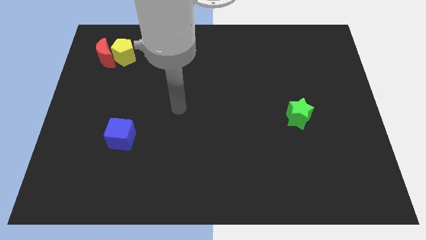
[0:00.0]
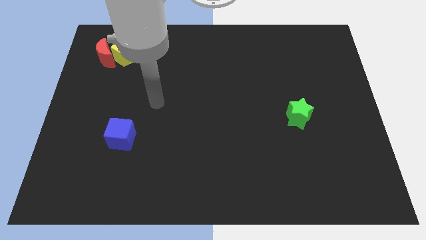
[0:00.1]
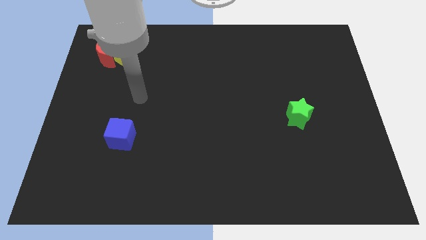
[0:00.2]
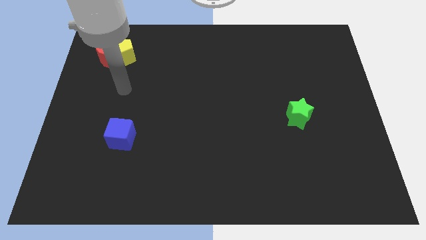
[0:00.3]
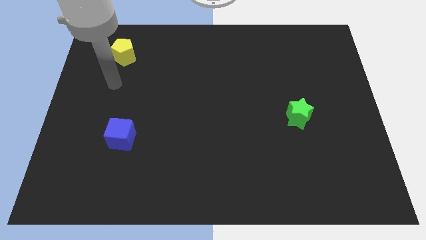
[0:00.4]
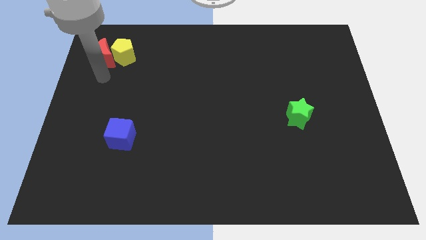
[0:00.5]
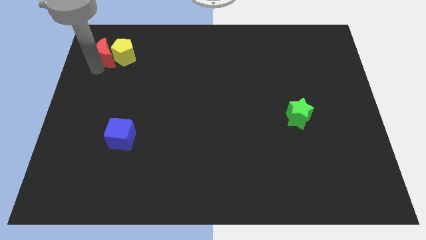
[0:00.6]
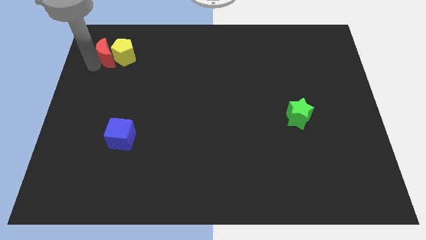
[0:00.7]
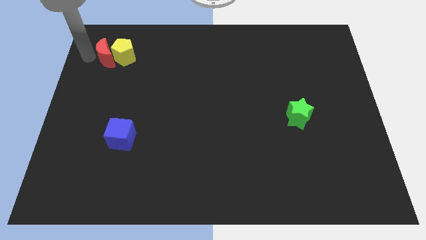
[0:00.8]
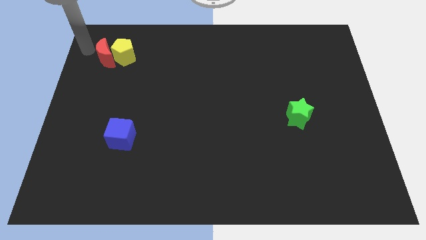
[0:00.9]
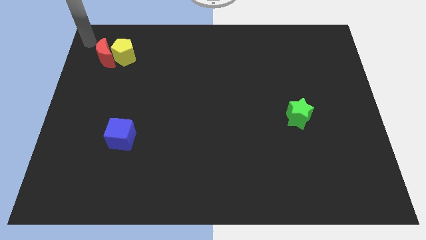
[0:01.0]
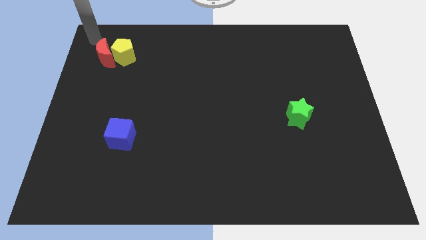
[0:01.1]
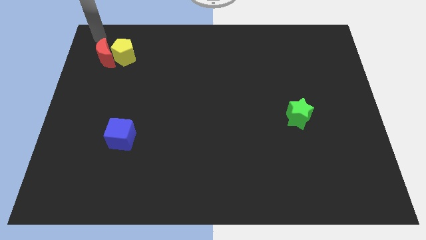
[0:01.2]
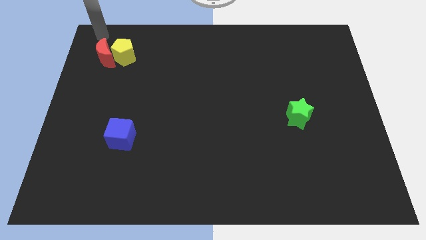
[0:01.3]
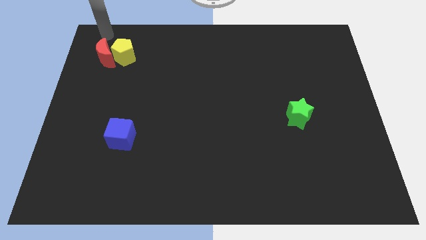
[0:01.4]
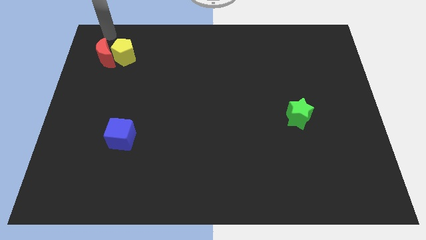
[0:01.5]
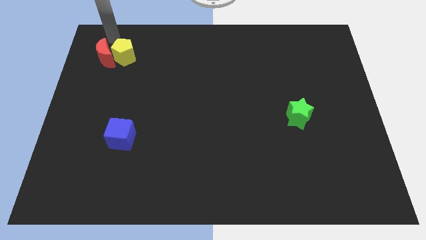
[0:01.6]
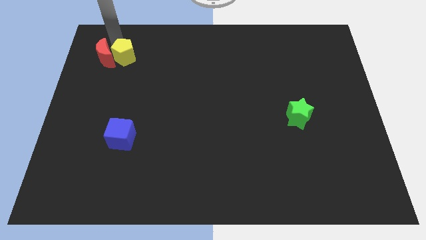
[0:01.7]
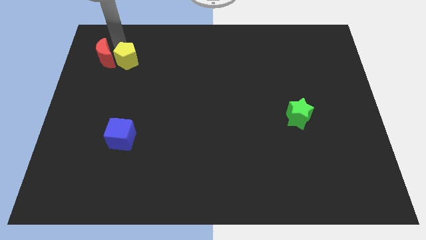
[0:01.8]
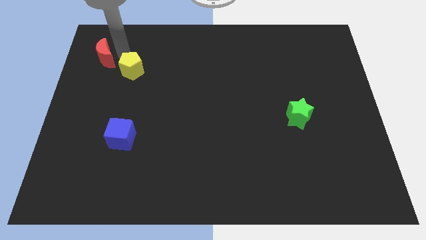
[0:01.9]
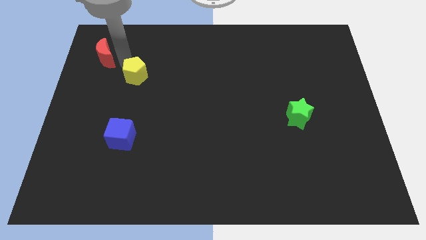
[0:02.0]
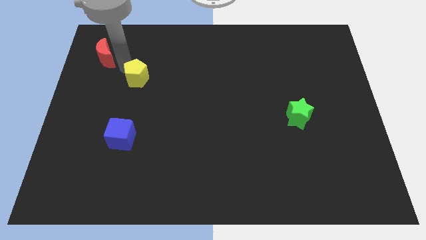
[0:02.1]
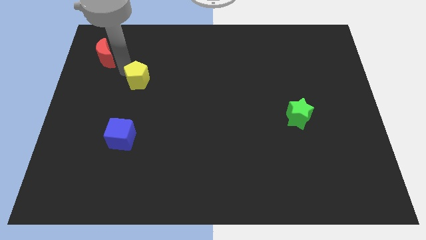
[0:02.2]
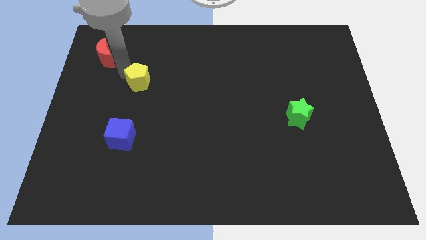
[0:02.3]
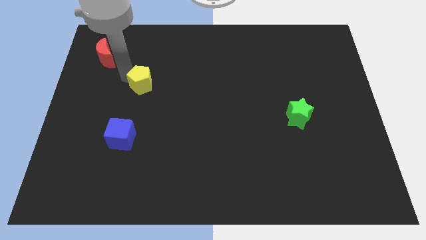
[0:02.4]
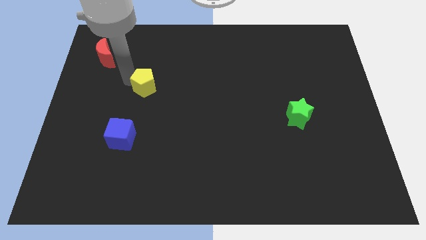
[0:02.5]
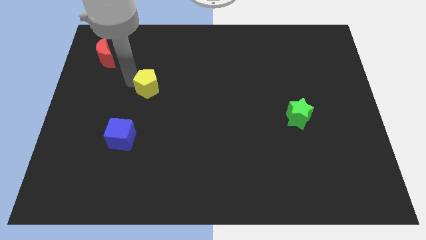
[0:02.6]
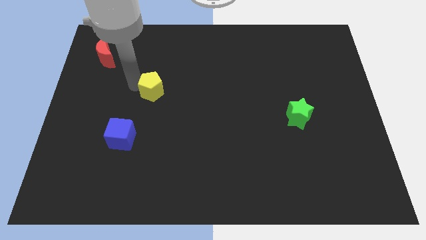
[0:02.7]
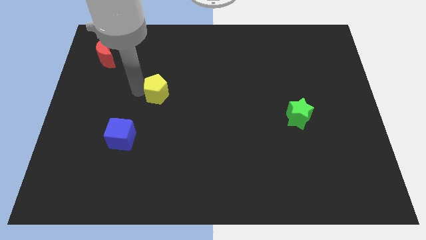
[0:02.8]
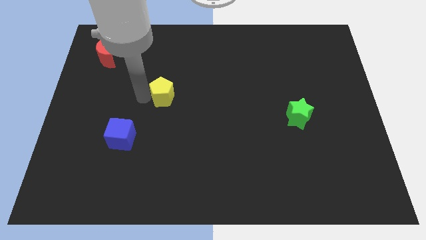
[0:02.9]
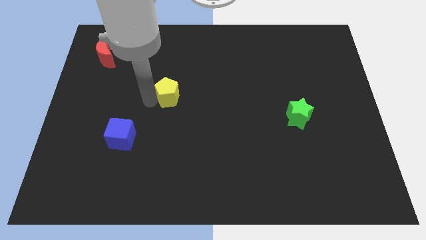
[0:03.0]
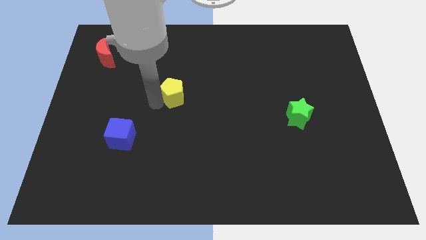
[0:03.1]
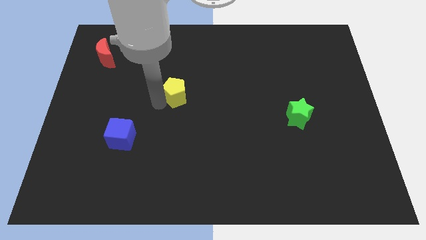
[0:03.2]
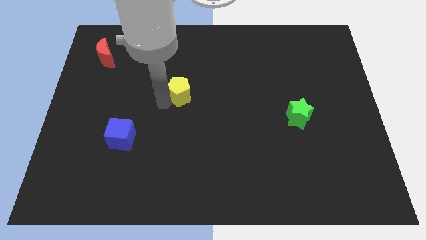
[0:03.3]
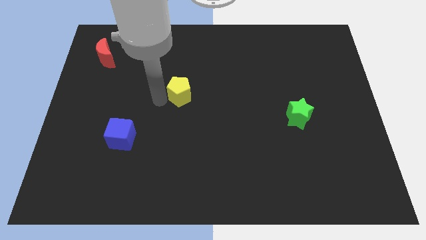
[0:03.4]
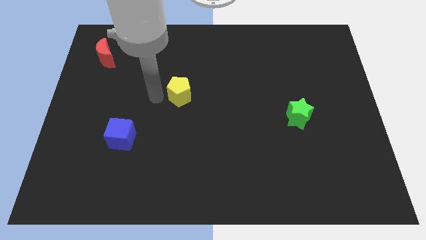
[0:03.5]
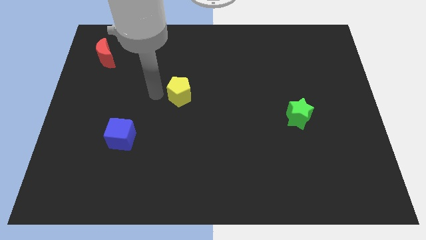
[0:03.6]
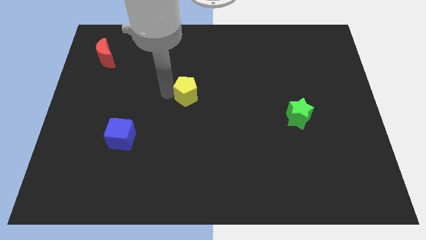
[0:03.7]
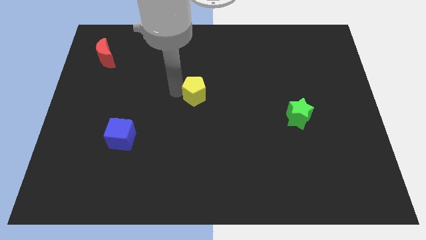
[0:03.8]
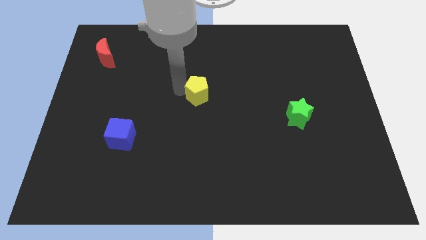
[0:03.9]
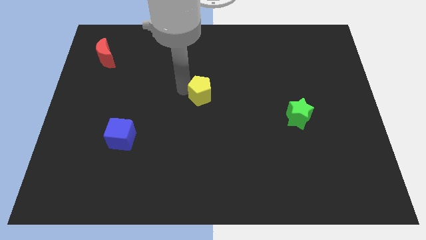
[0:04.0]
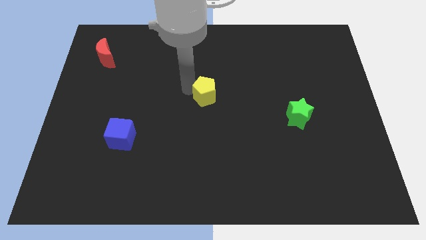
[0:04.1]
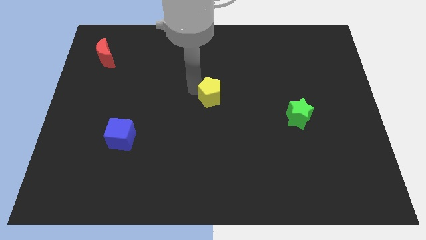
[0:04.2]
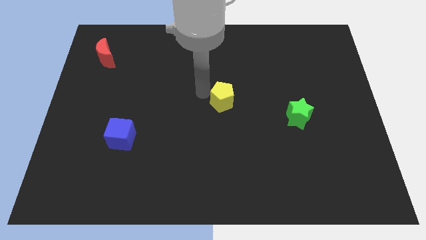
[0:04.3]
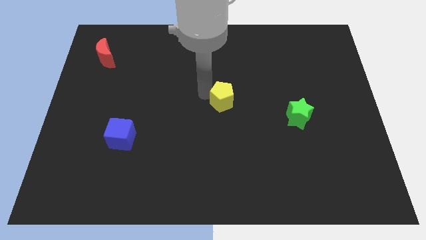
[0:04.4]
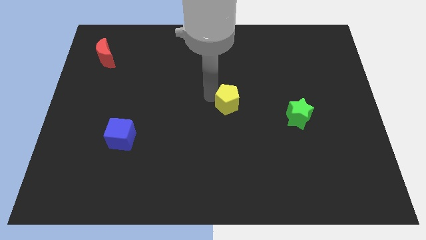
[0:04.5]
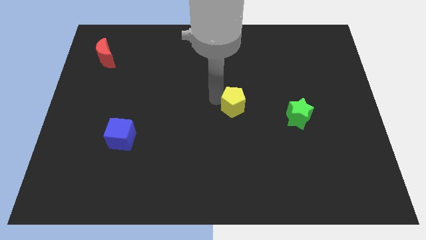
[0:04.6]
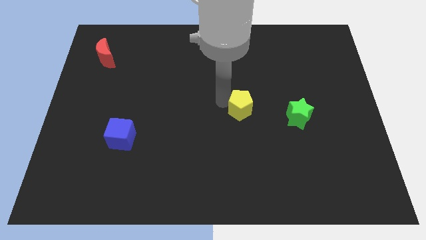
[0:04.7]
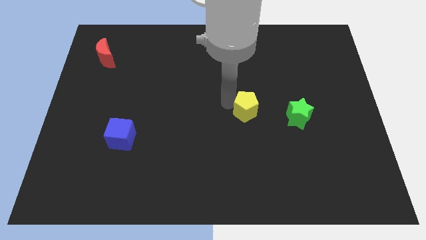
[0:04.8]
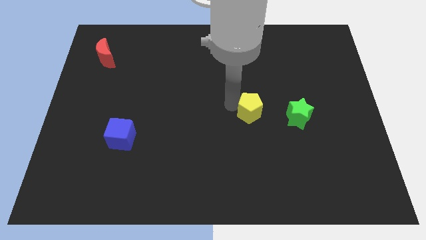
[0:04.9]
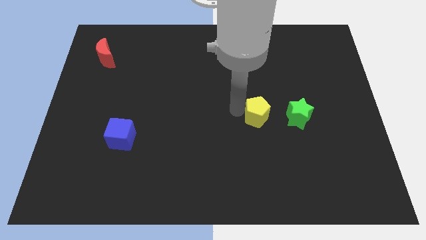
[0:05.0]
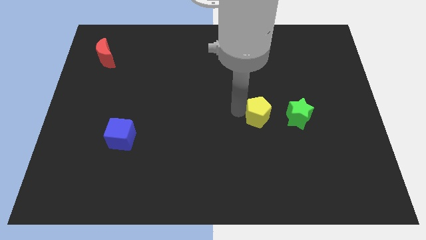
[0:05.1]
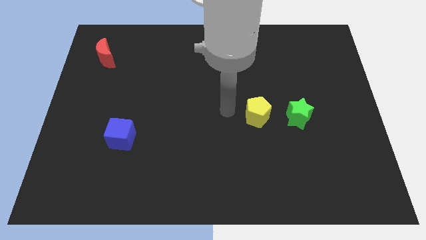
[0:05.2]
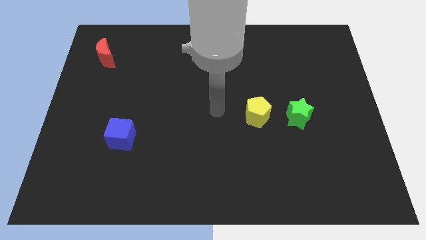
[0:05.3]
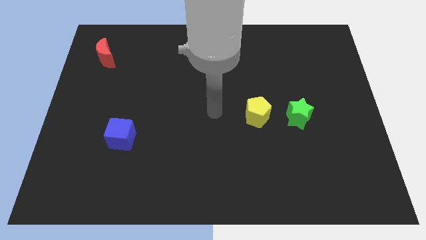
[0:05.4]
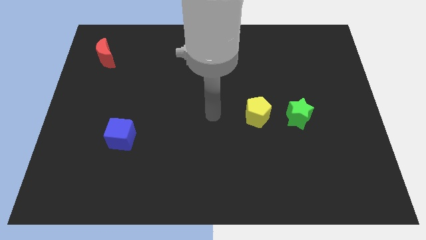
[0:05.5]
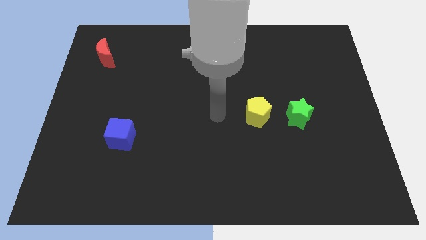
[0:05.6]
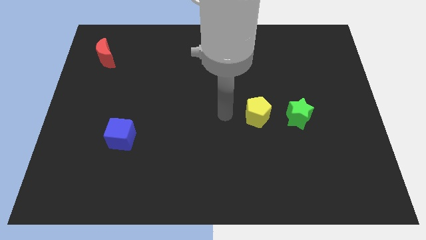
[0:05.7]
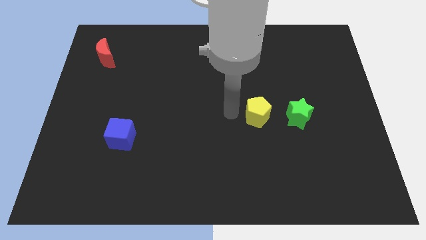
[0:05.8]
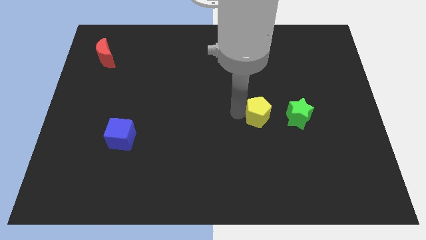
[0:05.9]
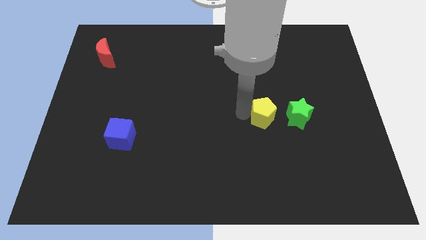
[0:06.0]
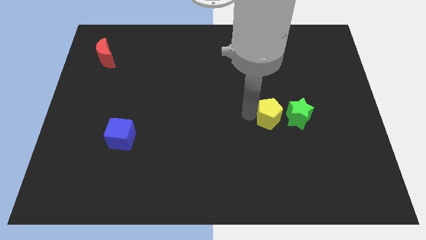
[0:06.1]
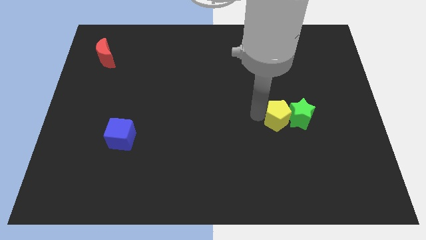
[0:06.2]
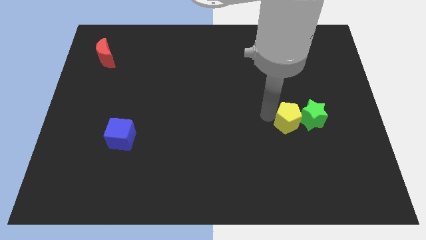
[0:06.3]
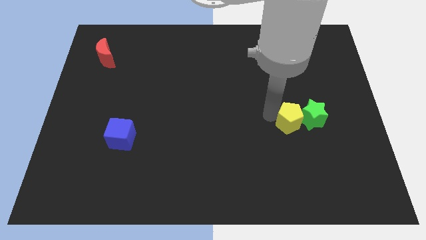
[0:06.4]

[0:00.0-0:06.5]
put the yellow pentagon next to the green star

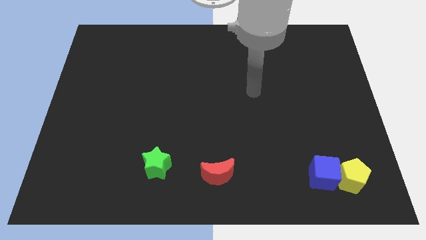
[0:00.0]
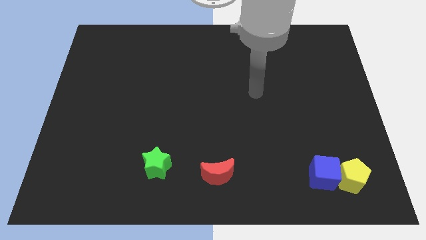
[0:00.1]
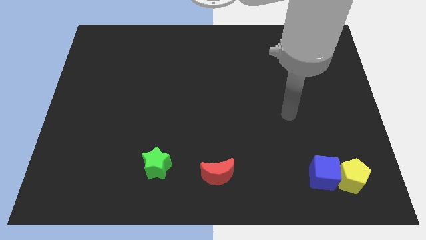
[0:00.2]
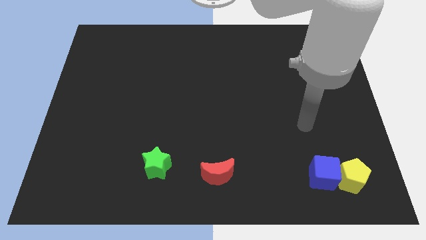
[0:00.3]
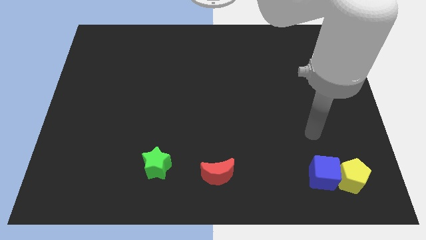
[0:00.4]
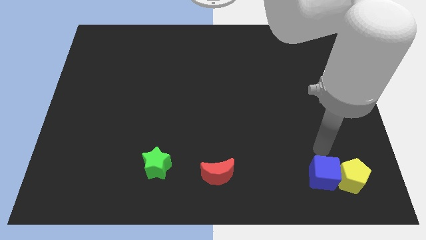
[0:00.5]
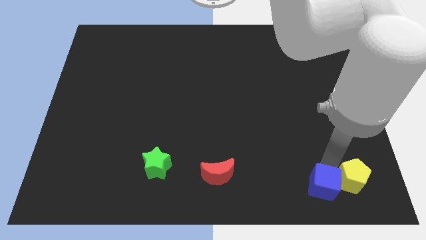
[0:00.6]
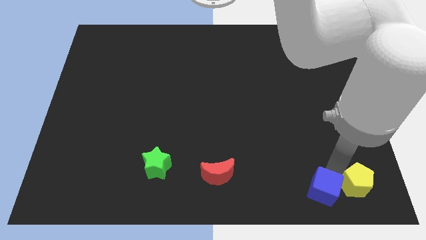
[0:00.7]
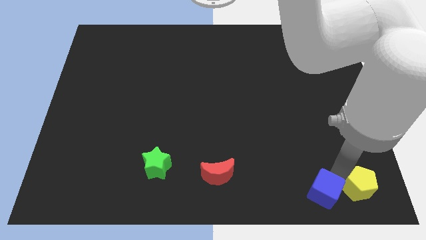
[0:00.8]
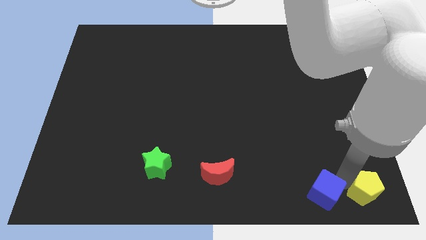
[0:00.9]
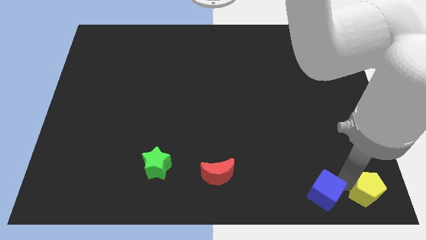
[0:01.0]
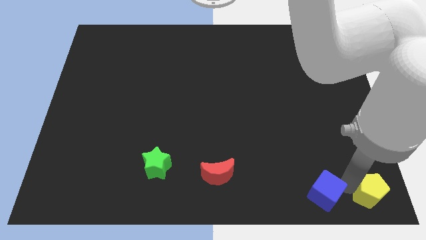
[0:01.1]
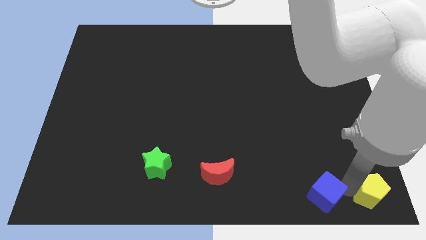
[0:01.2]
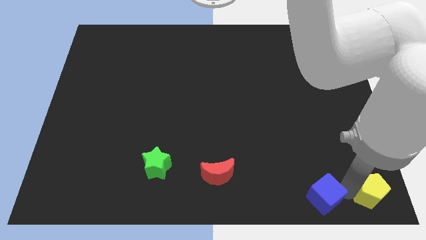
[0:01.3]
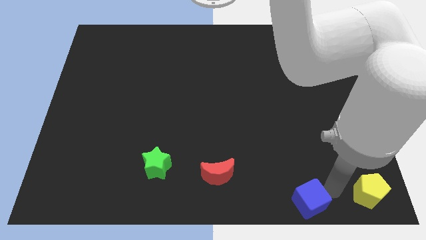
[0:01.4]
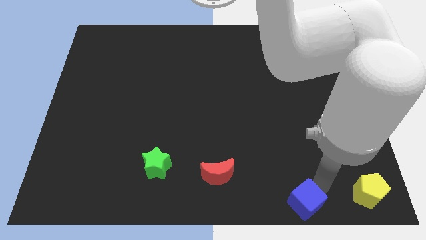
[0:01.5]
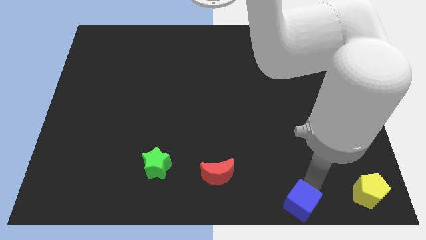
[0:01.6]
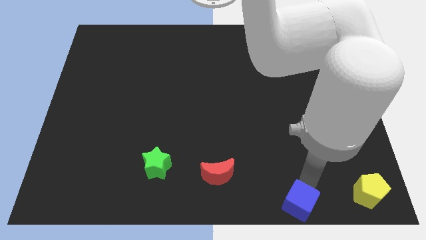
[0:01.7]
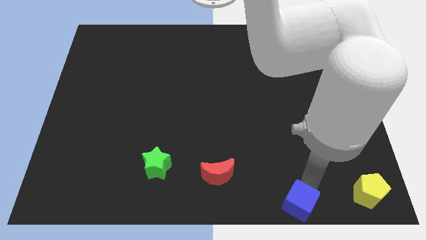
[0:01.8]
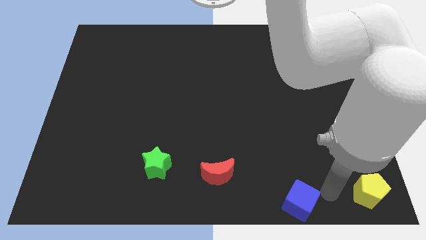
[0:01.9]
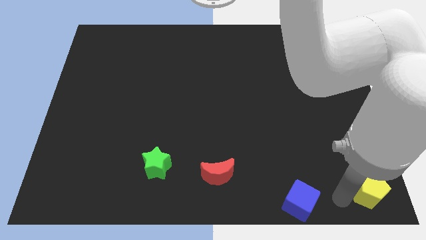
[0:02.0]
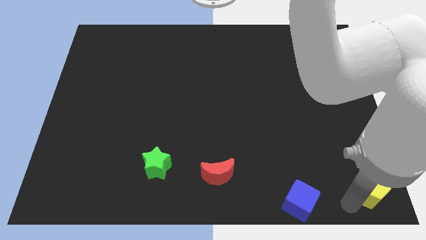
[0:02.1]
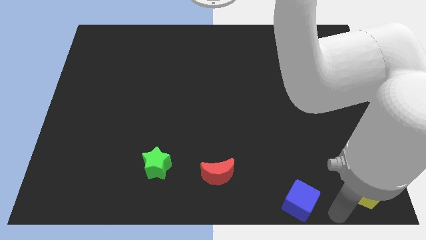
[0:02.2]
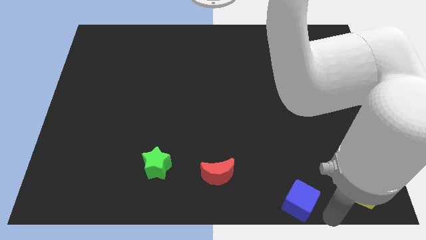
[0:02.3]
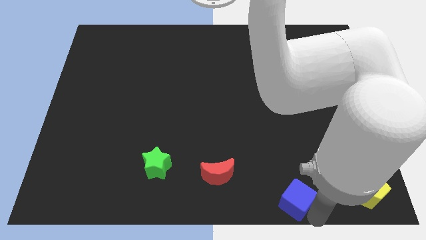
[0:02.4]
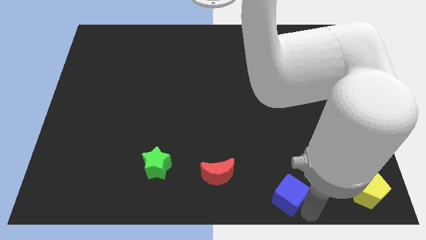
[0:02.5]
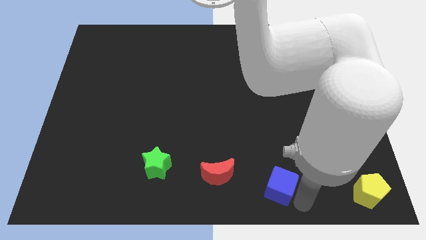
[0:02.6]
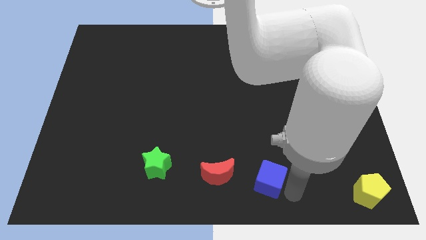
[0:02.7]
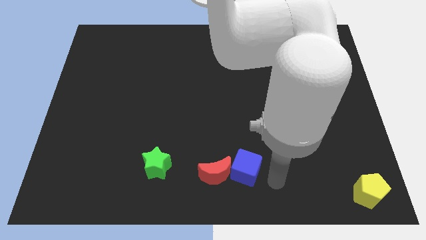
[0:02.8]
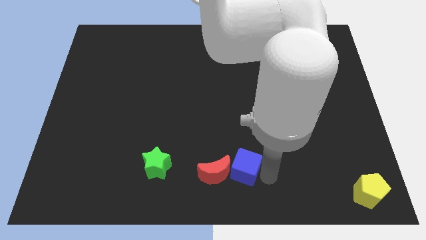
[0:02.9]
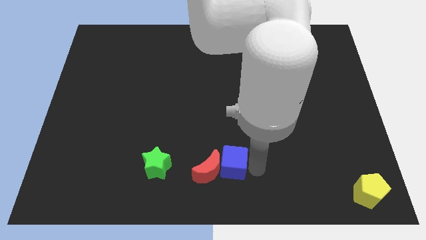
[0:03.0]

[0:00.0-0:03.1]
push the cube close to the moon
